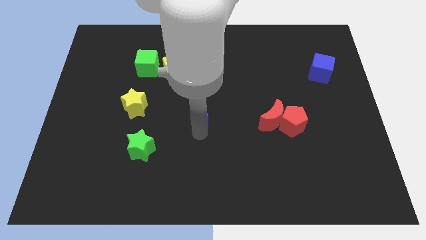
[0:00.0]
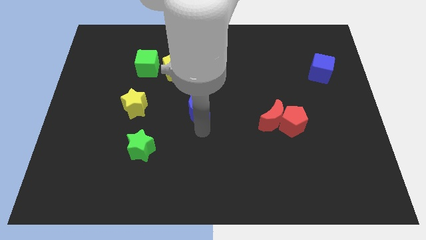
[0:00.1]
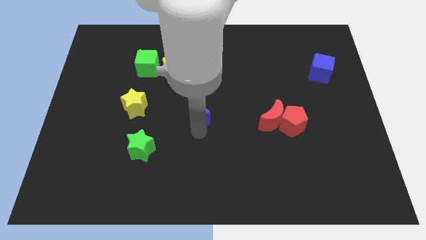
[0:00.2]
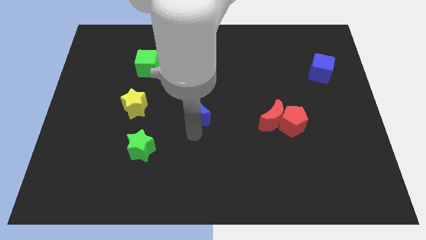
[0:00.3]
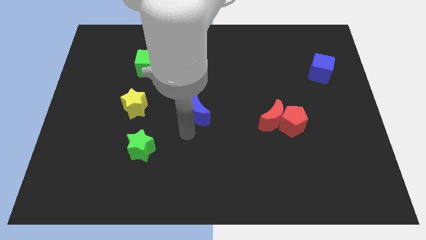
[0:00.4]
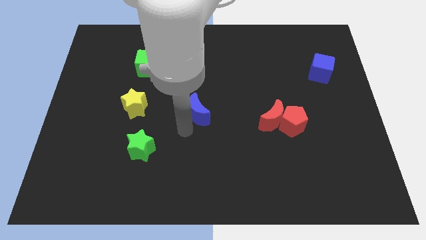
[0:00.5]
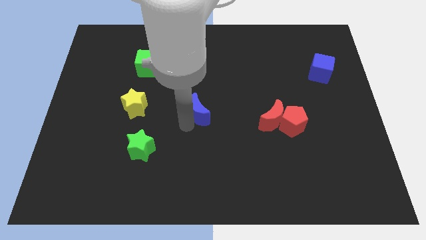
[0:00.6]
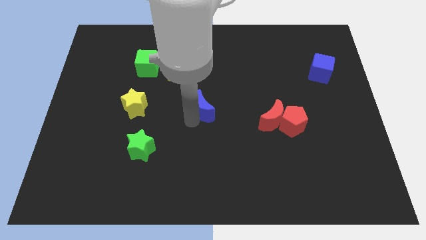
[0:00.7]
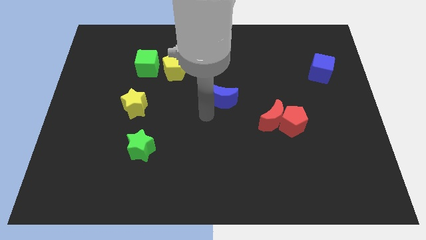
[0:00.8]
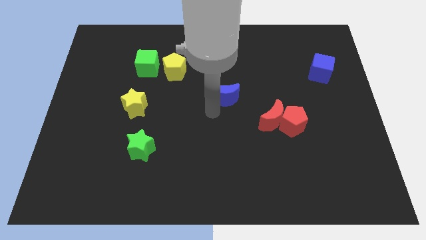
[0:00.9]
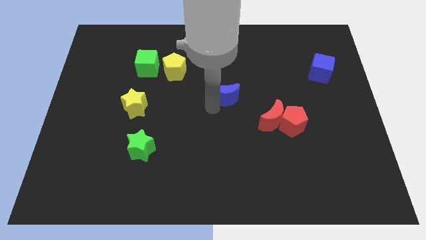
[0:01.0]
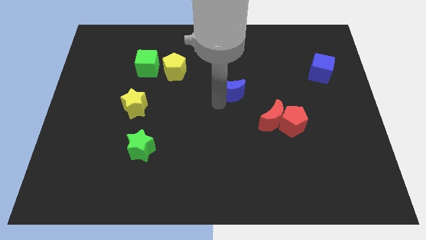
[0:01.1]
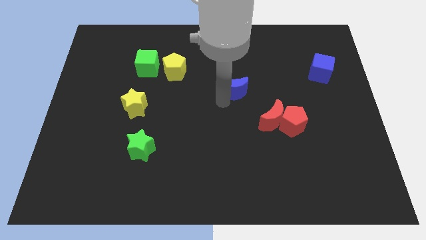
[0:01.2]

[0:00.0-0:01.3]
push the blue crescent to the center of the board

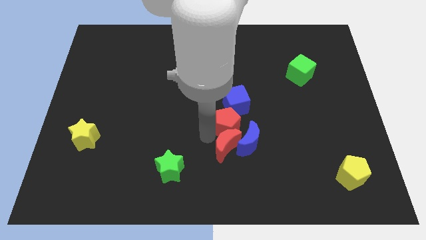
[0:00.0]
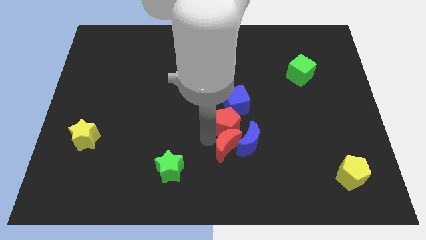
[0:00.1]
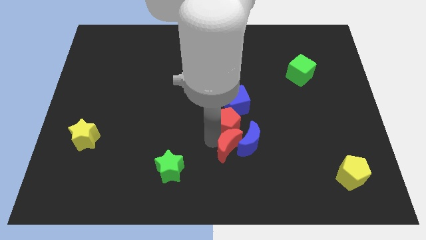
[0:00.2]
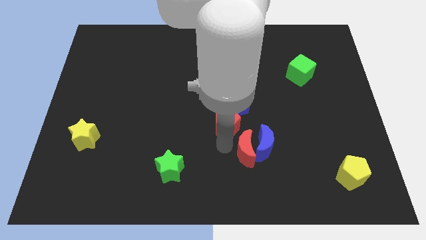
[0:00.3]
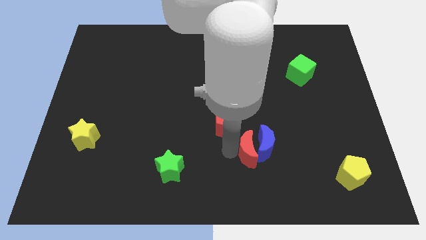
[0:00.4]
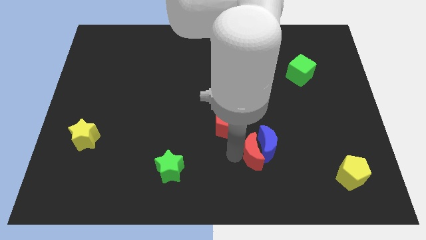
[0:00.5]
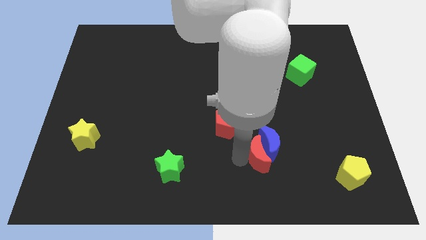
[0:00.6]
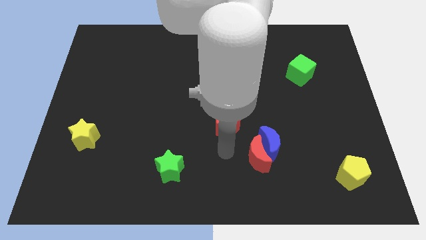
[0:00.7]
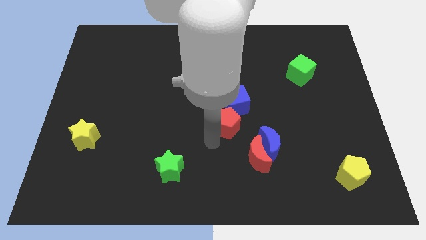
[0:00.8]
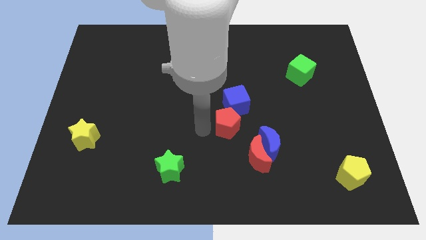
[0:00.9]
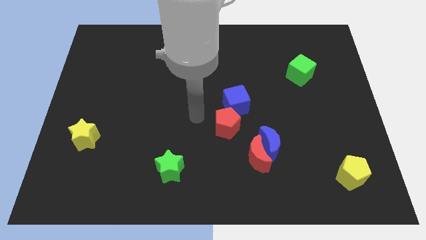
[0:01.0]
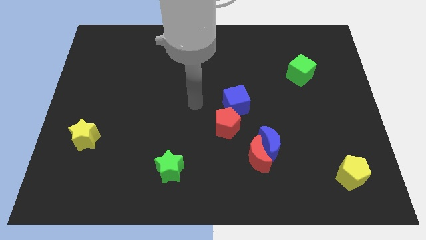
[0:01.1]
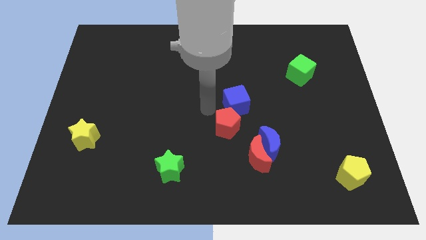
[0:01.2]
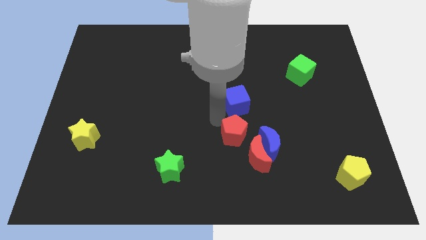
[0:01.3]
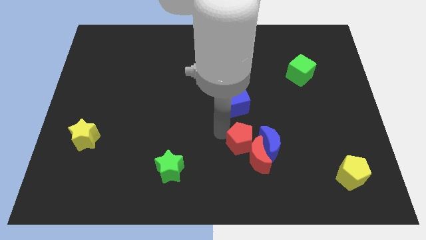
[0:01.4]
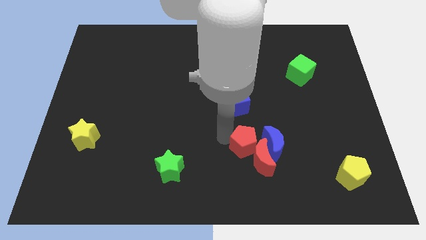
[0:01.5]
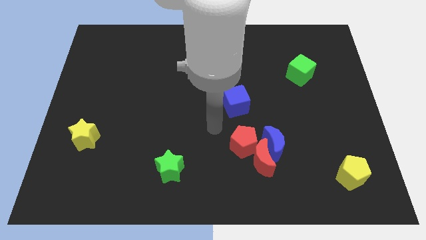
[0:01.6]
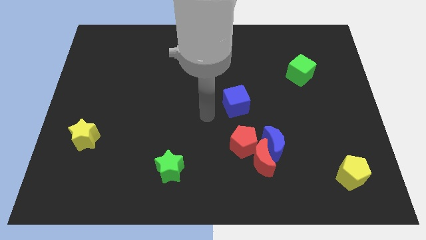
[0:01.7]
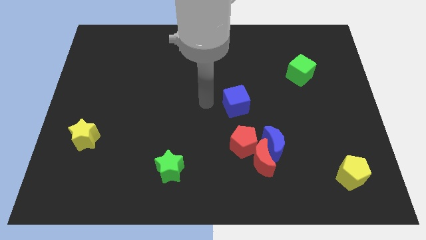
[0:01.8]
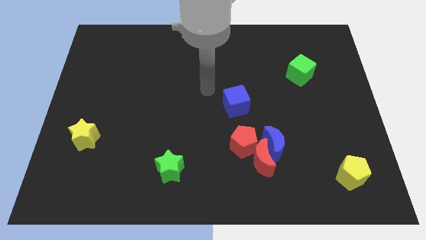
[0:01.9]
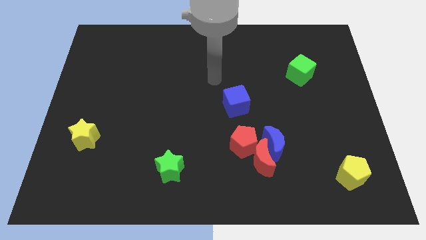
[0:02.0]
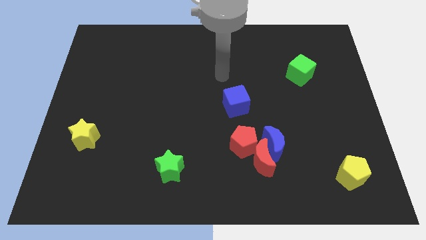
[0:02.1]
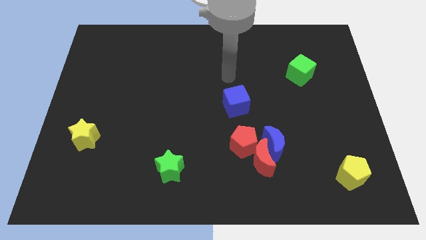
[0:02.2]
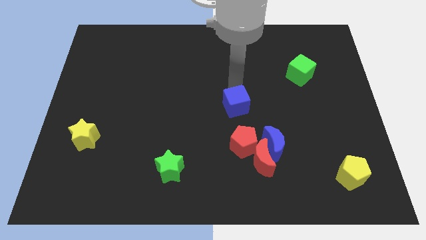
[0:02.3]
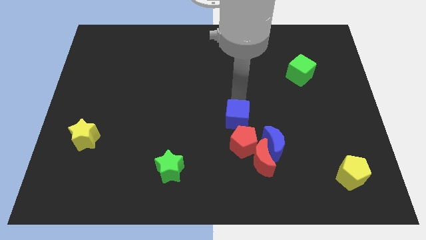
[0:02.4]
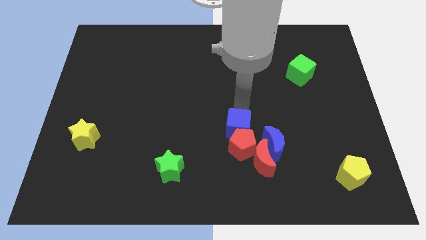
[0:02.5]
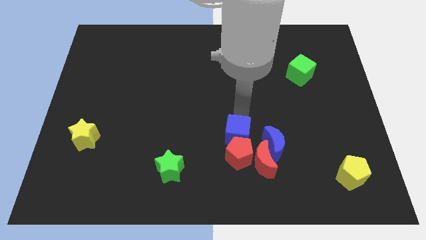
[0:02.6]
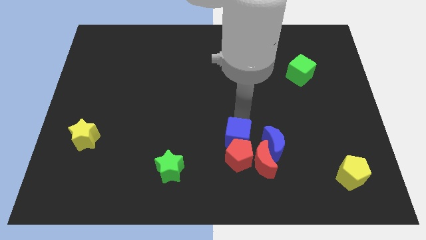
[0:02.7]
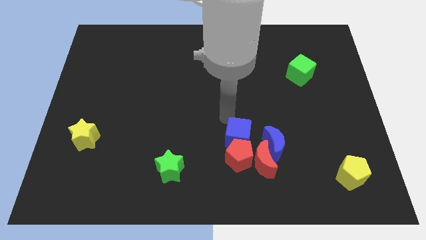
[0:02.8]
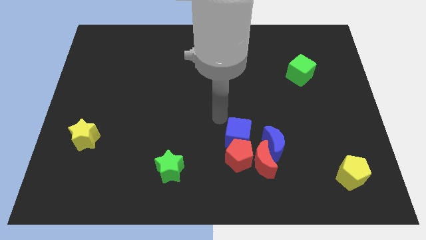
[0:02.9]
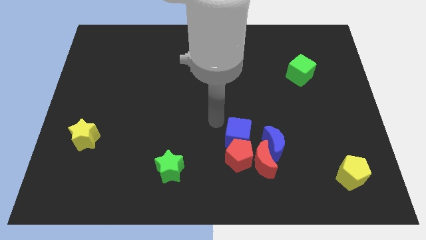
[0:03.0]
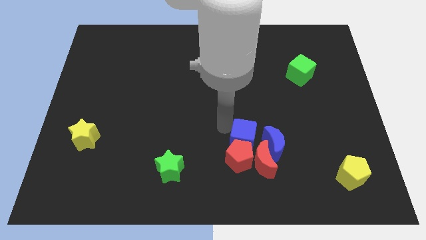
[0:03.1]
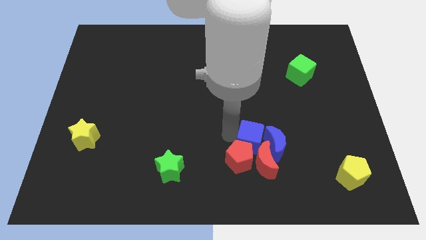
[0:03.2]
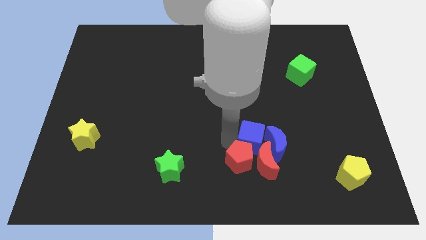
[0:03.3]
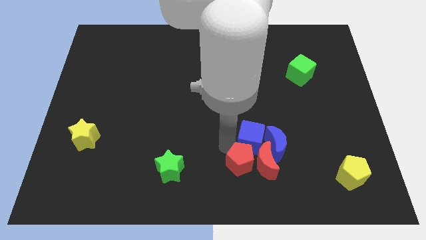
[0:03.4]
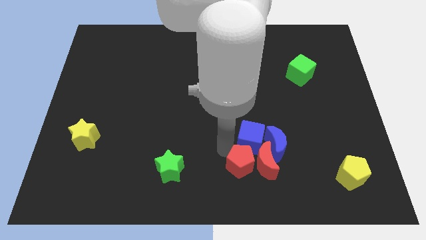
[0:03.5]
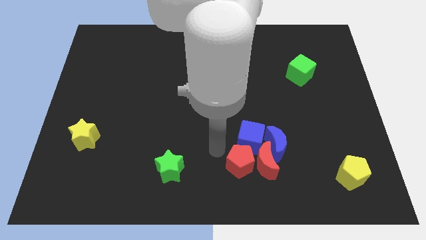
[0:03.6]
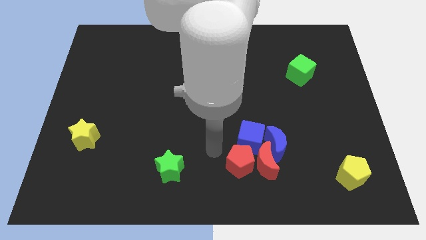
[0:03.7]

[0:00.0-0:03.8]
move red and blue blocks together to form a group

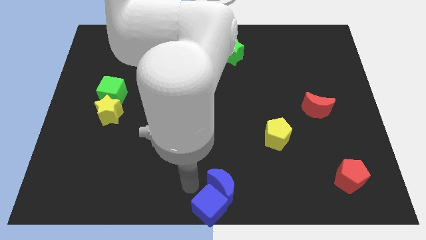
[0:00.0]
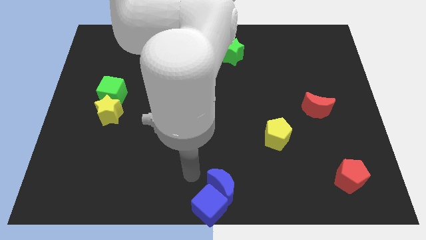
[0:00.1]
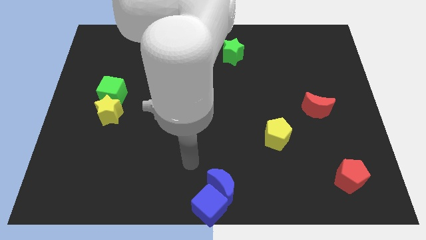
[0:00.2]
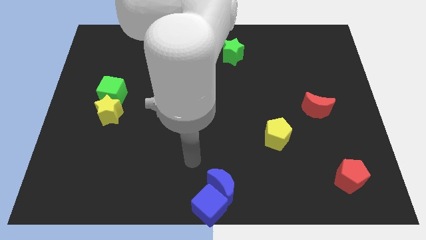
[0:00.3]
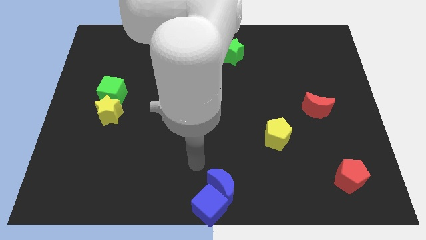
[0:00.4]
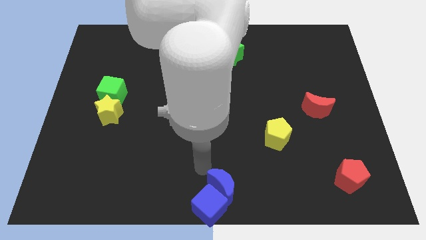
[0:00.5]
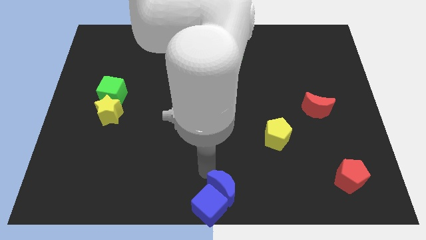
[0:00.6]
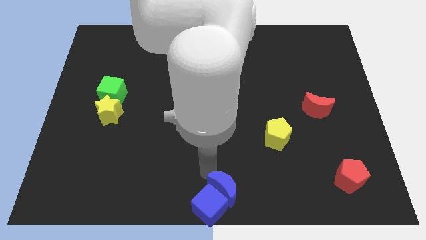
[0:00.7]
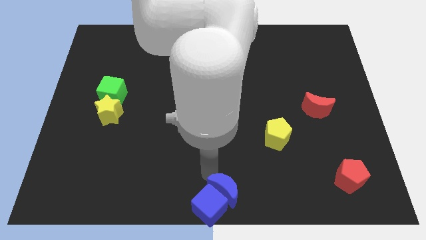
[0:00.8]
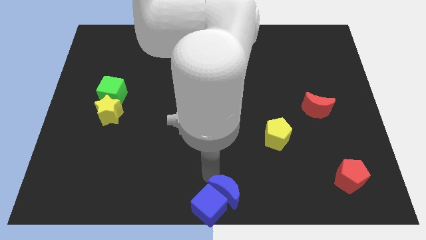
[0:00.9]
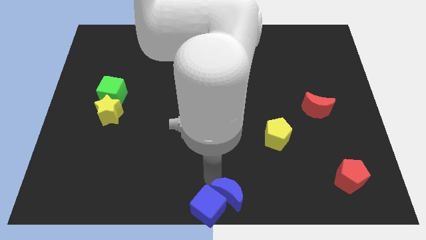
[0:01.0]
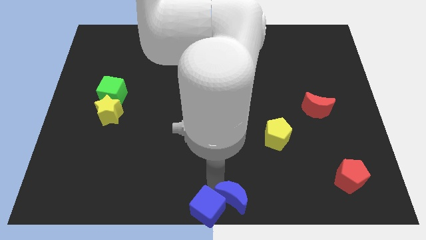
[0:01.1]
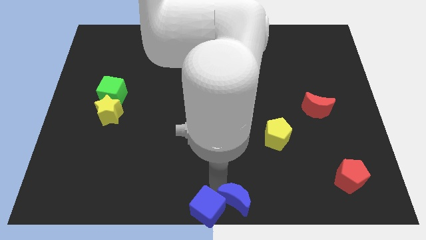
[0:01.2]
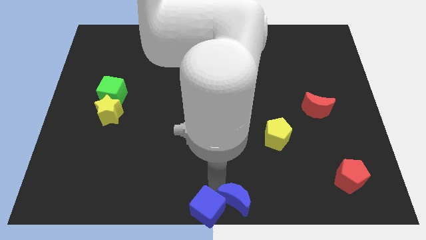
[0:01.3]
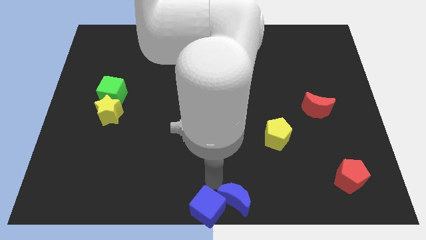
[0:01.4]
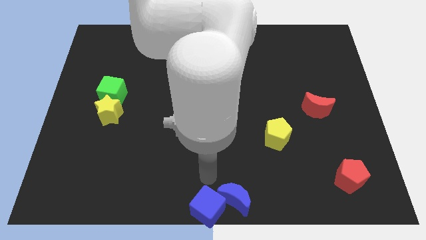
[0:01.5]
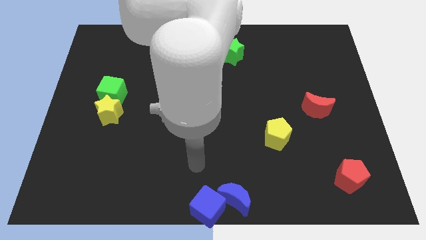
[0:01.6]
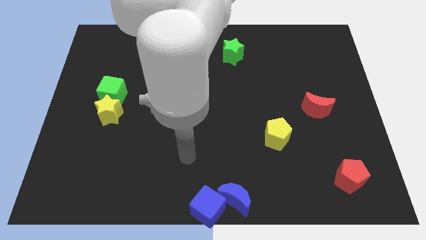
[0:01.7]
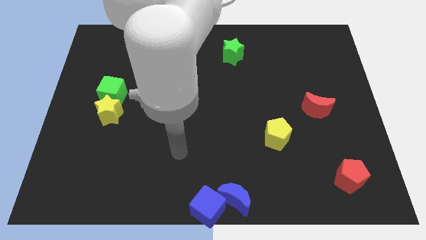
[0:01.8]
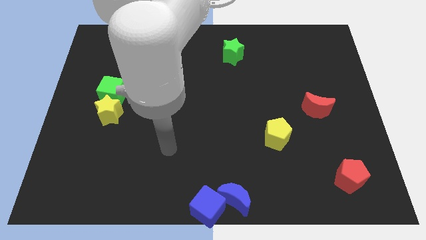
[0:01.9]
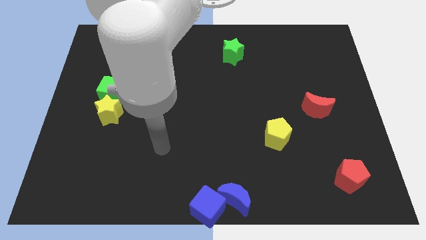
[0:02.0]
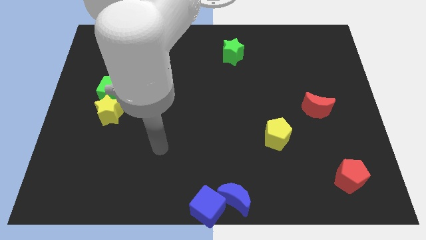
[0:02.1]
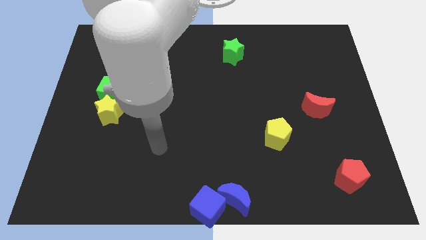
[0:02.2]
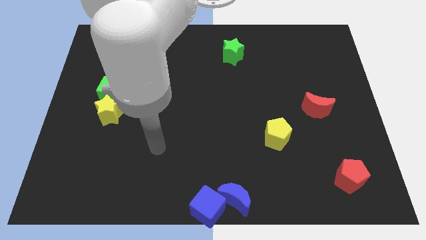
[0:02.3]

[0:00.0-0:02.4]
move yourself away from the blue moon

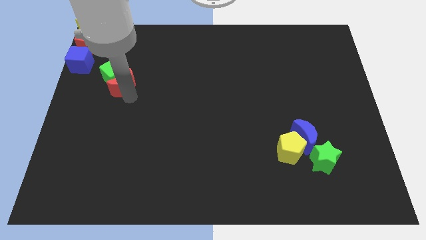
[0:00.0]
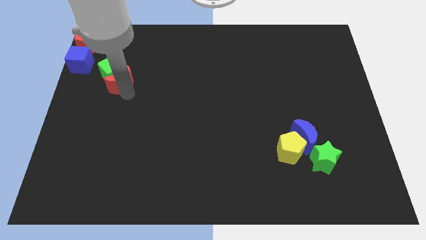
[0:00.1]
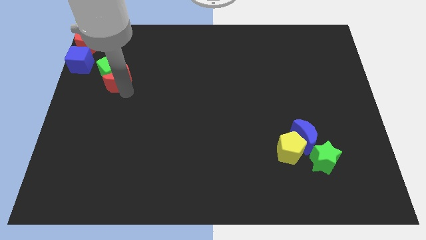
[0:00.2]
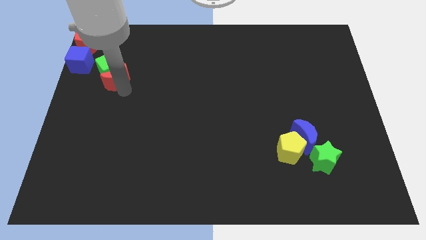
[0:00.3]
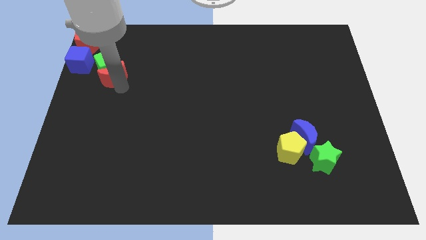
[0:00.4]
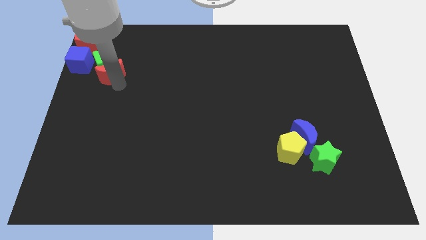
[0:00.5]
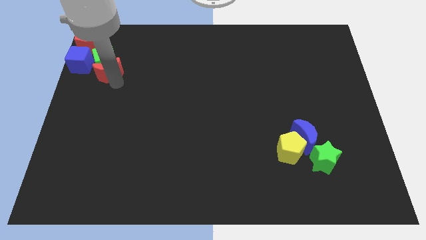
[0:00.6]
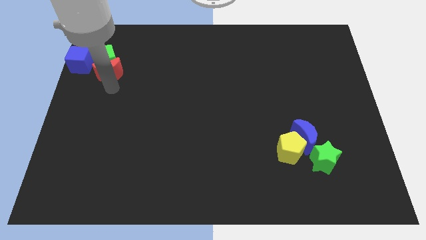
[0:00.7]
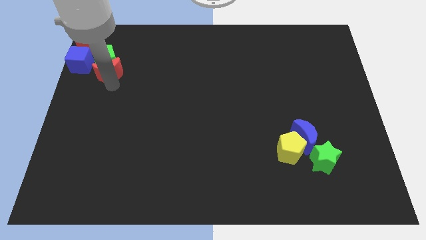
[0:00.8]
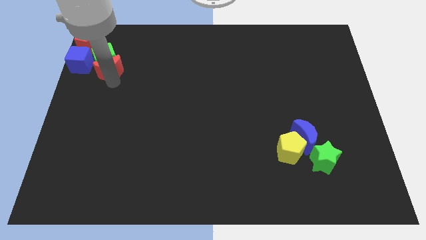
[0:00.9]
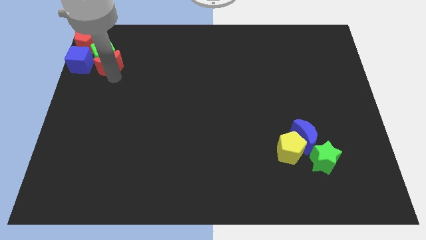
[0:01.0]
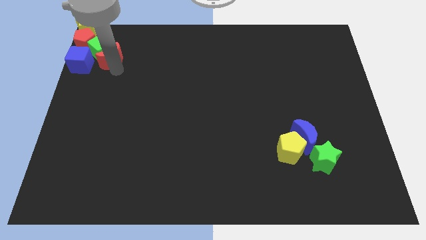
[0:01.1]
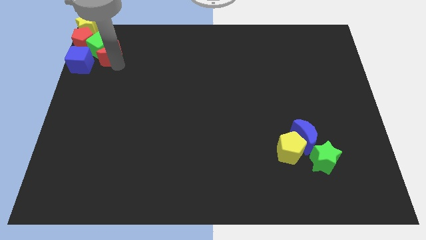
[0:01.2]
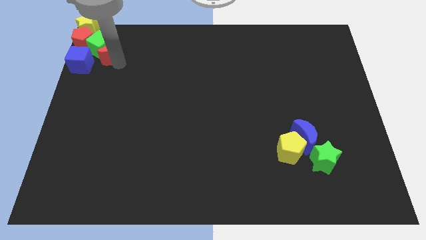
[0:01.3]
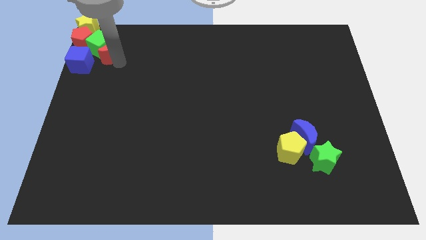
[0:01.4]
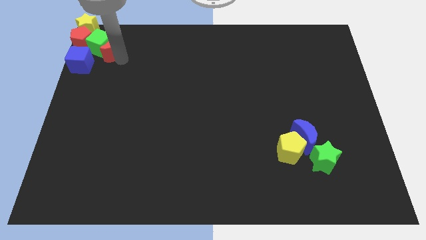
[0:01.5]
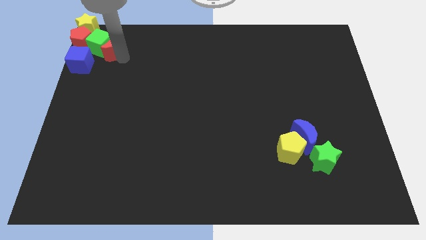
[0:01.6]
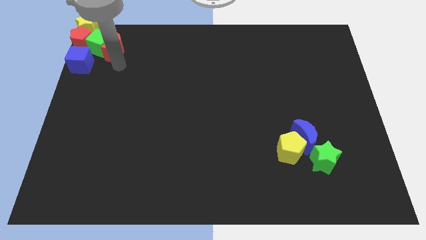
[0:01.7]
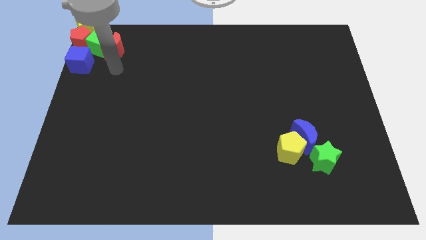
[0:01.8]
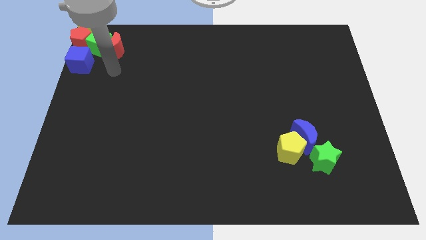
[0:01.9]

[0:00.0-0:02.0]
push the green cube and red moon into the red pentagon
